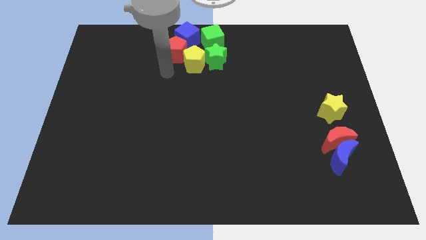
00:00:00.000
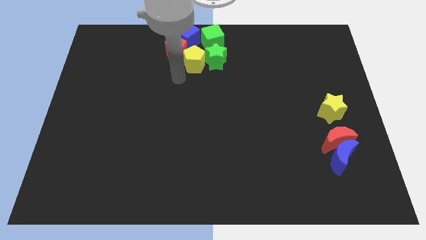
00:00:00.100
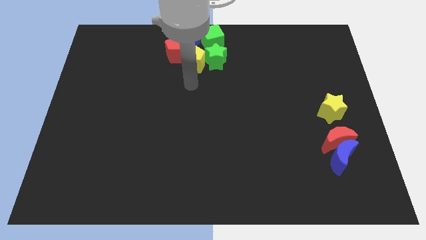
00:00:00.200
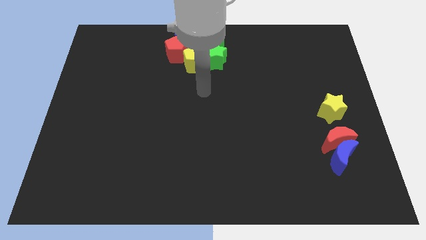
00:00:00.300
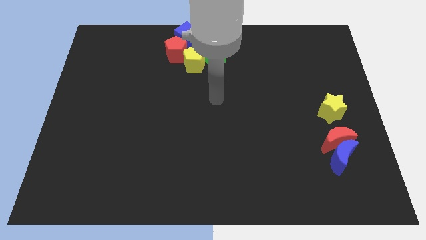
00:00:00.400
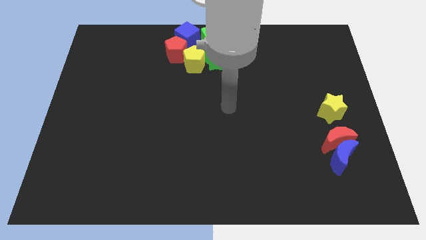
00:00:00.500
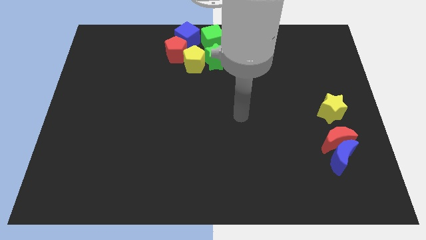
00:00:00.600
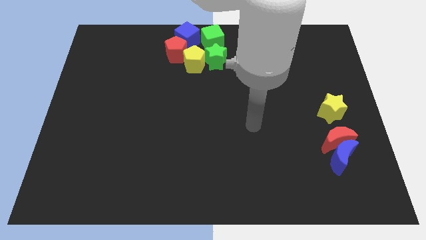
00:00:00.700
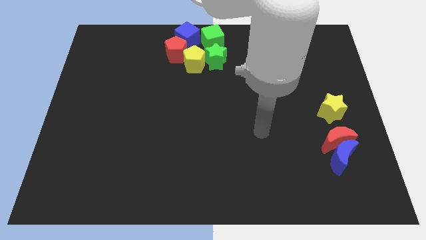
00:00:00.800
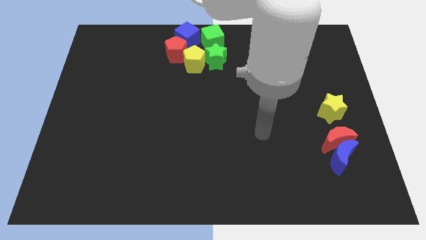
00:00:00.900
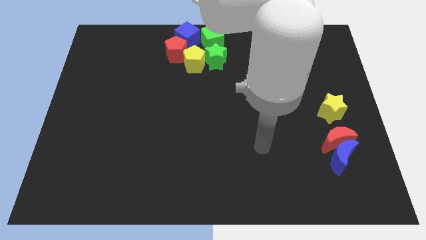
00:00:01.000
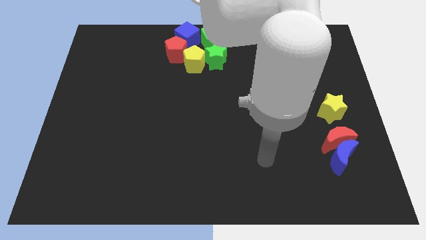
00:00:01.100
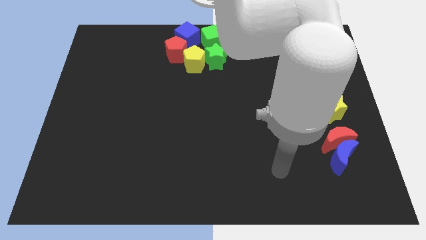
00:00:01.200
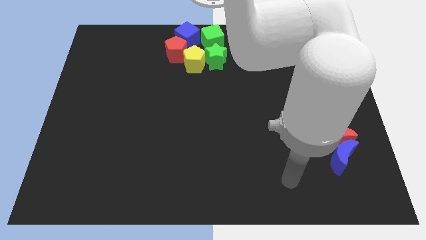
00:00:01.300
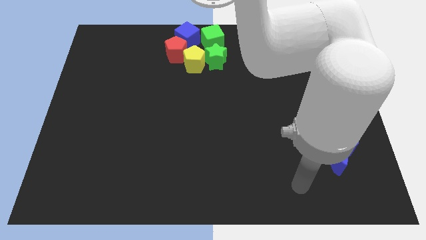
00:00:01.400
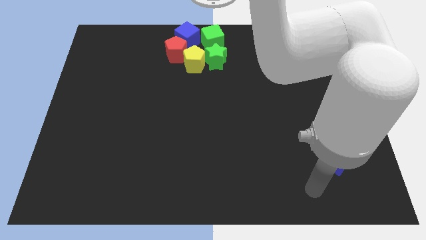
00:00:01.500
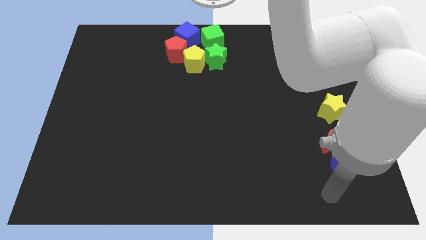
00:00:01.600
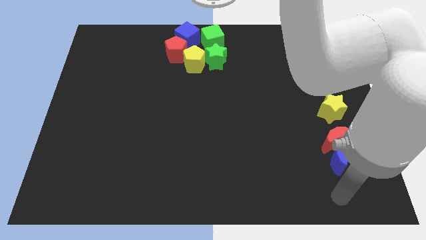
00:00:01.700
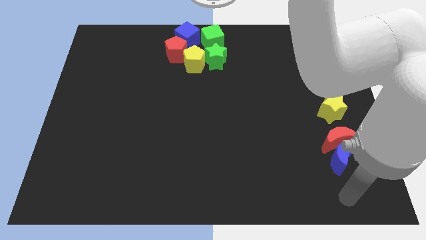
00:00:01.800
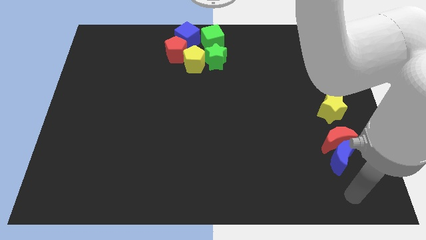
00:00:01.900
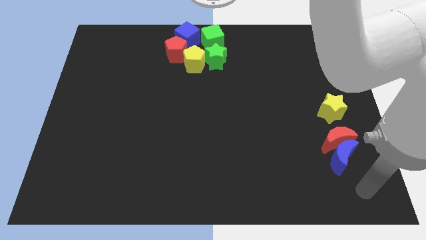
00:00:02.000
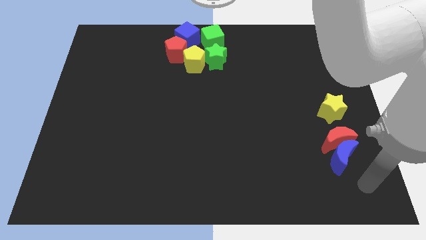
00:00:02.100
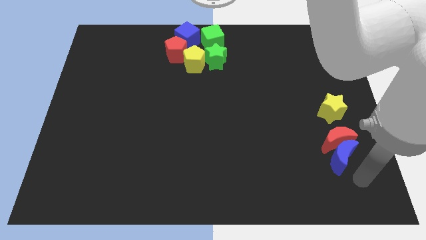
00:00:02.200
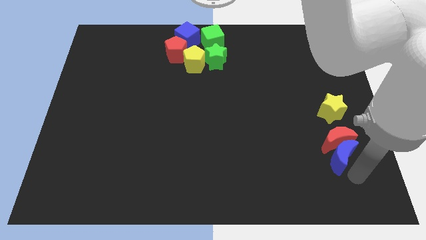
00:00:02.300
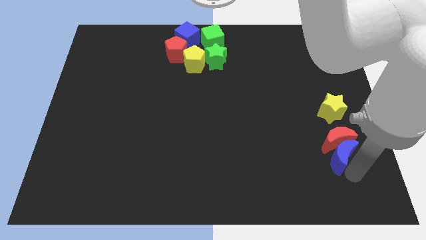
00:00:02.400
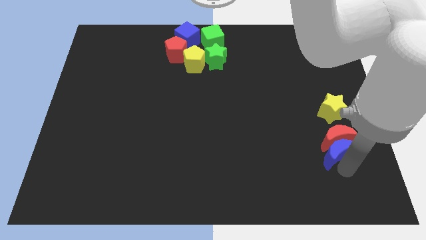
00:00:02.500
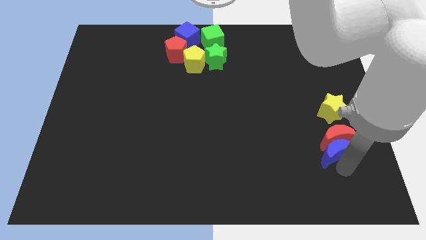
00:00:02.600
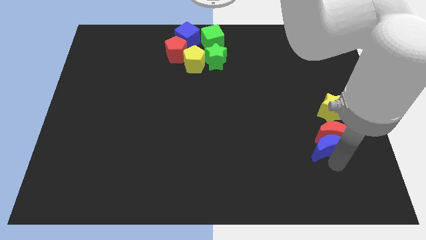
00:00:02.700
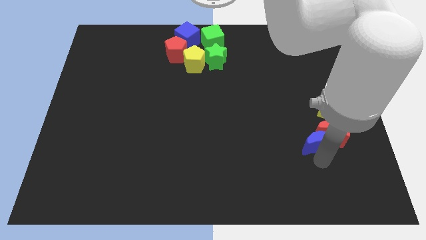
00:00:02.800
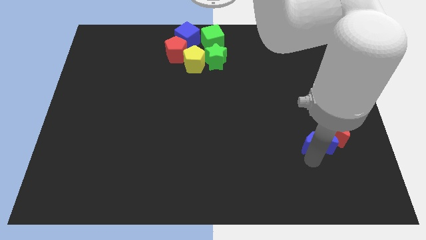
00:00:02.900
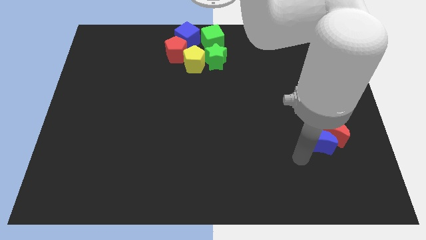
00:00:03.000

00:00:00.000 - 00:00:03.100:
push the blue crescent into red crescent
